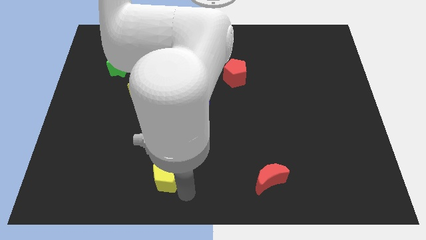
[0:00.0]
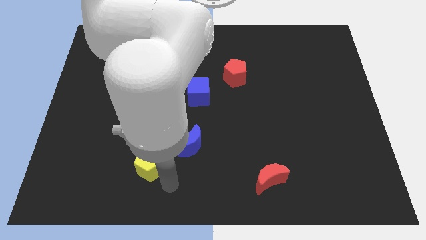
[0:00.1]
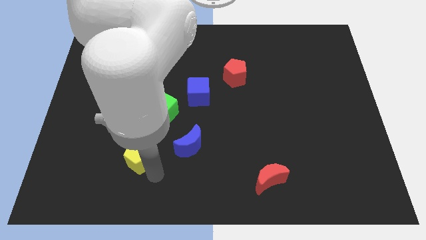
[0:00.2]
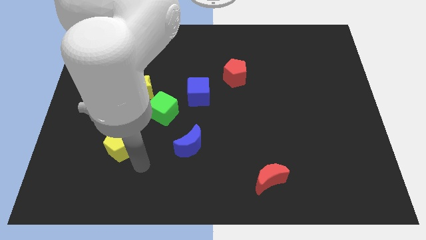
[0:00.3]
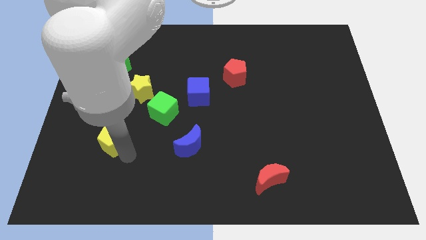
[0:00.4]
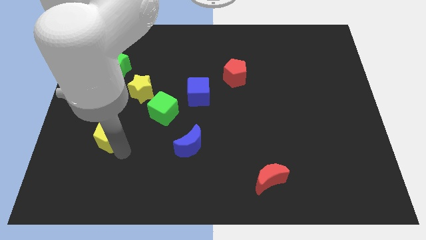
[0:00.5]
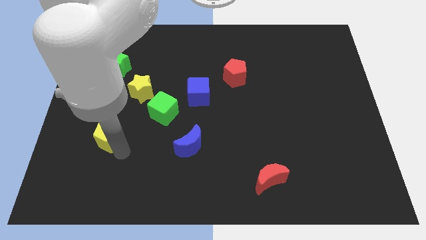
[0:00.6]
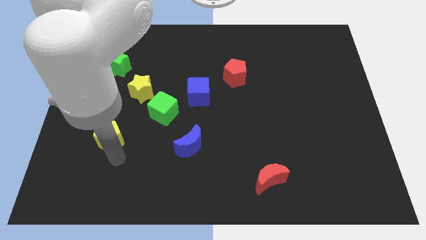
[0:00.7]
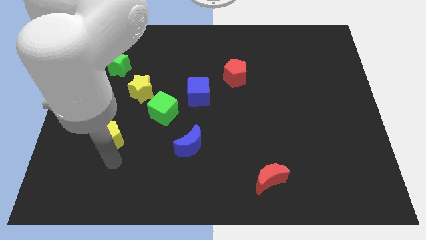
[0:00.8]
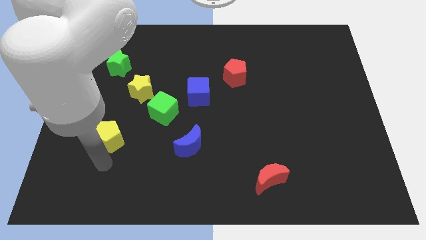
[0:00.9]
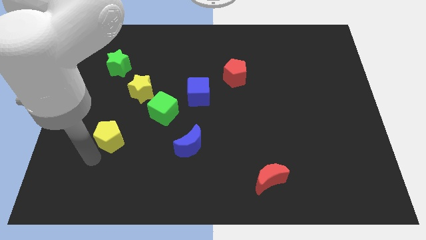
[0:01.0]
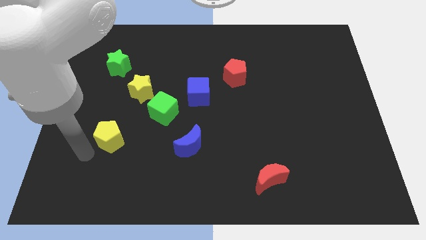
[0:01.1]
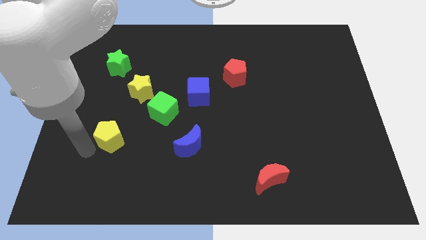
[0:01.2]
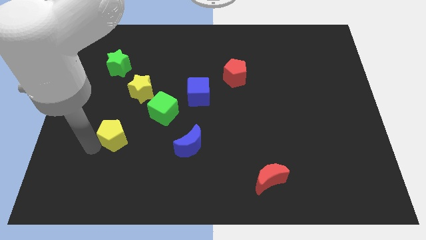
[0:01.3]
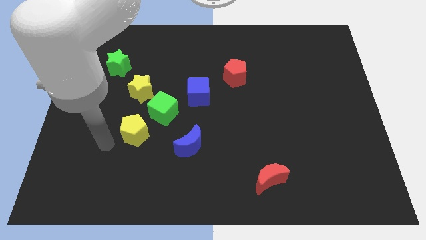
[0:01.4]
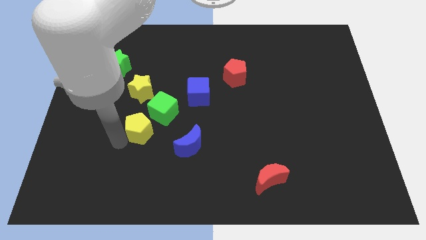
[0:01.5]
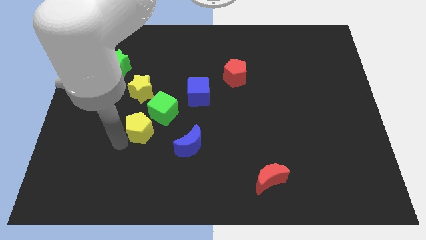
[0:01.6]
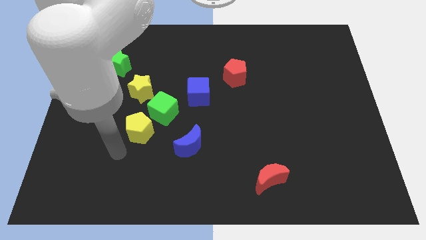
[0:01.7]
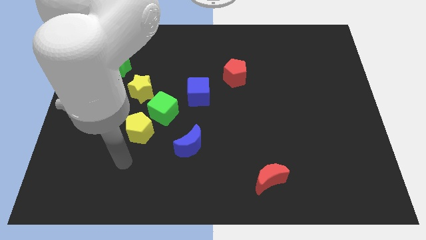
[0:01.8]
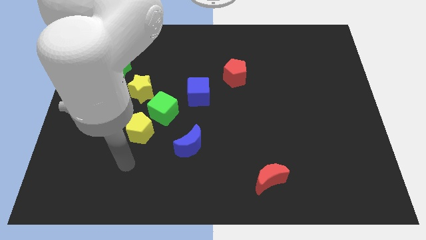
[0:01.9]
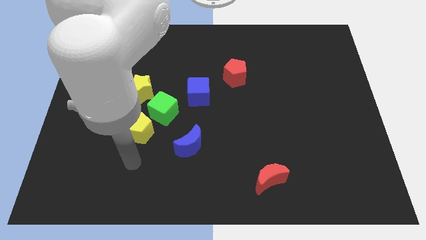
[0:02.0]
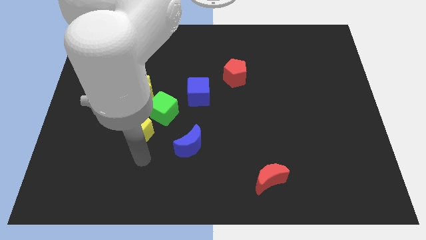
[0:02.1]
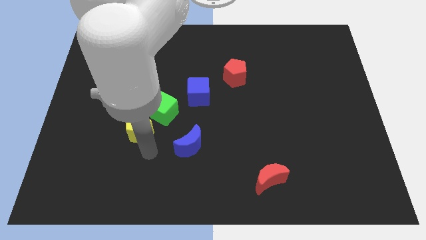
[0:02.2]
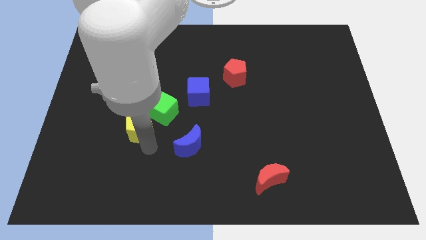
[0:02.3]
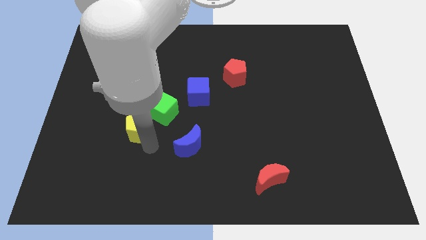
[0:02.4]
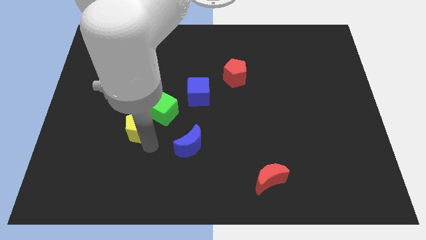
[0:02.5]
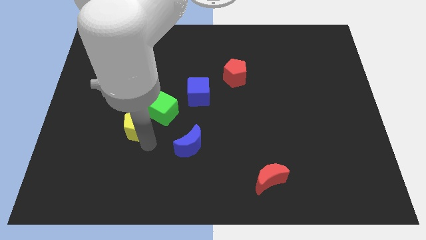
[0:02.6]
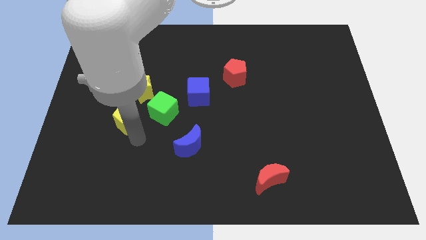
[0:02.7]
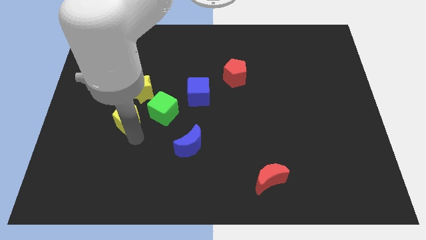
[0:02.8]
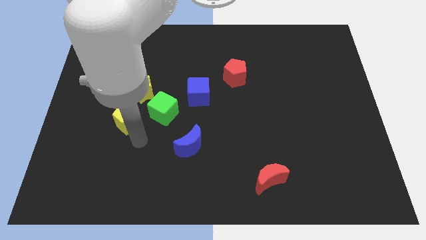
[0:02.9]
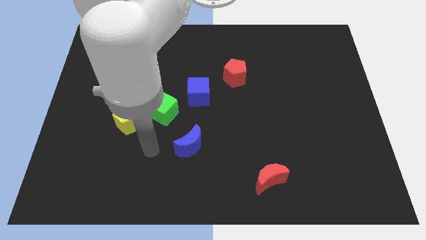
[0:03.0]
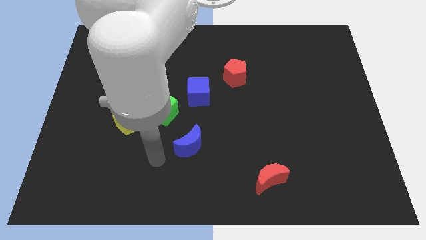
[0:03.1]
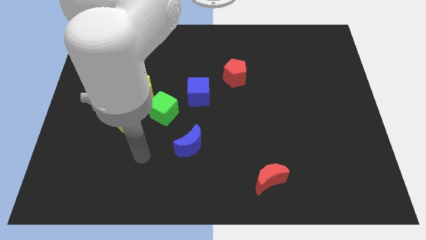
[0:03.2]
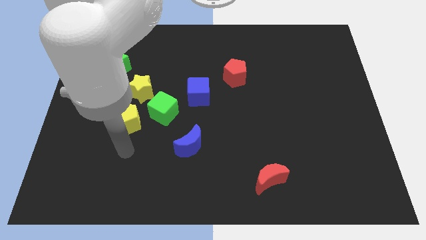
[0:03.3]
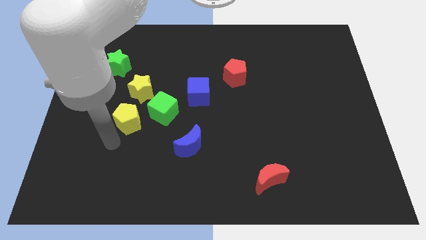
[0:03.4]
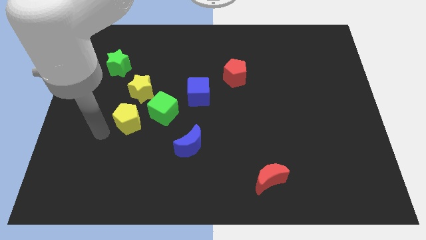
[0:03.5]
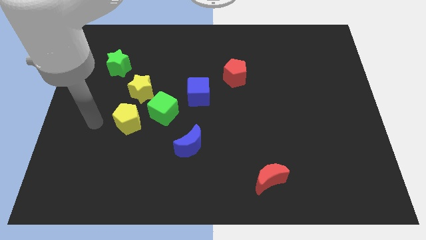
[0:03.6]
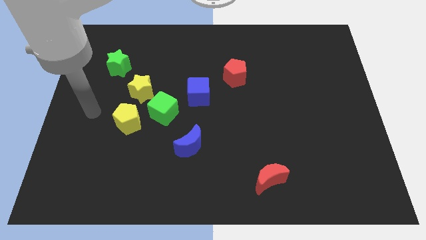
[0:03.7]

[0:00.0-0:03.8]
slide the yellow pentagon to the left of the green cube

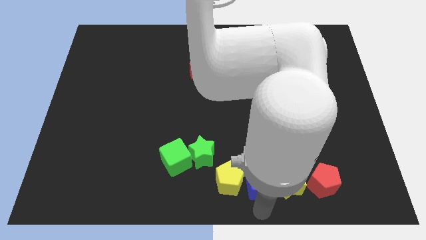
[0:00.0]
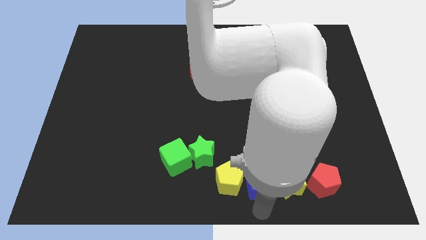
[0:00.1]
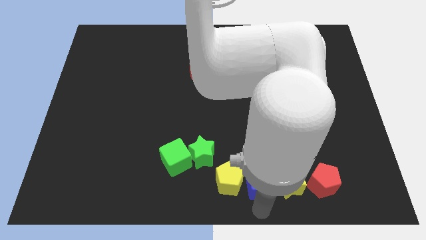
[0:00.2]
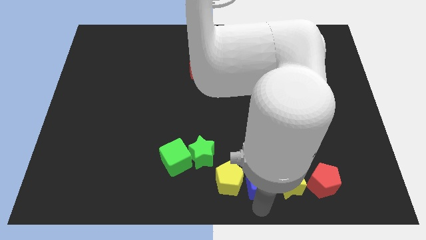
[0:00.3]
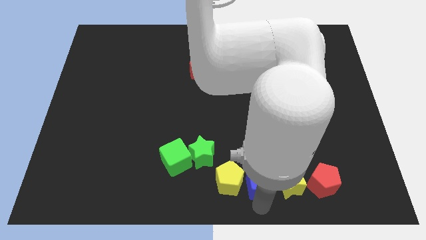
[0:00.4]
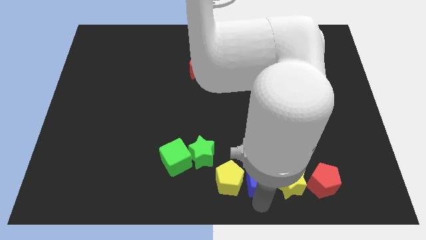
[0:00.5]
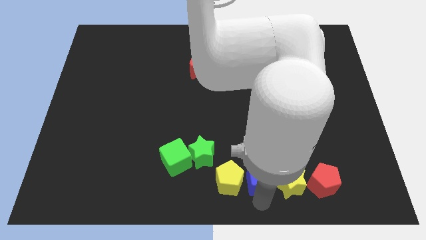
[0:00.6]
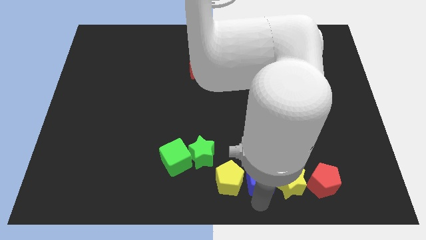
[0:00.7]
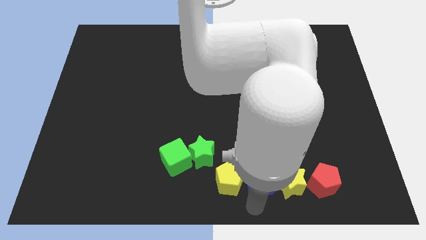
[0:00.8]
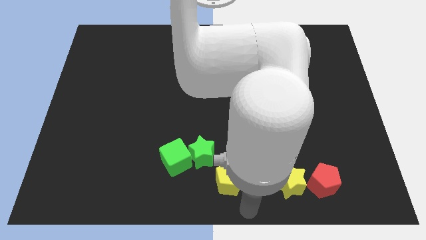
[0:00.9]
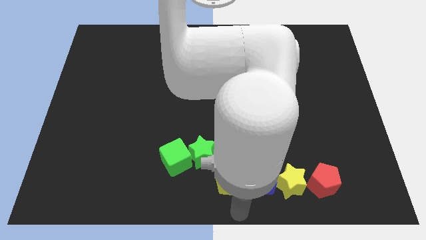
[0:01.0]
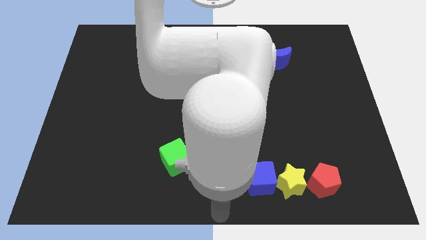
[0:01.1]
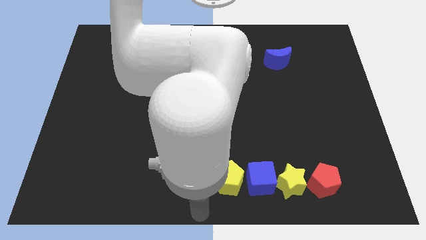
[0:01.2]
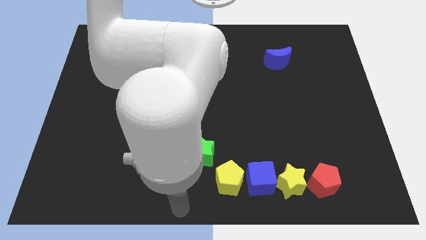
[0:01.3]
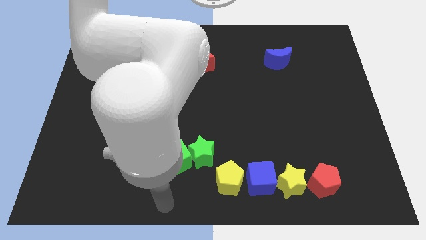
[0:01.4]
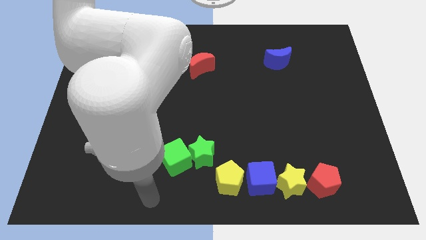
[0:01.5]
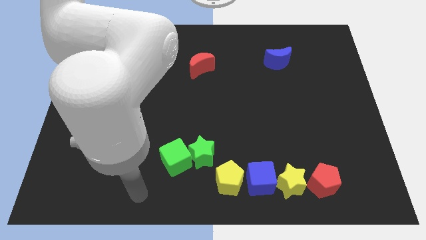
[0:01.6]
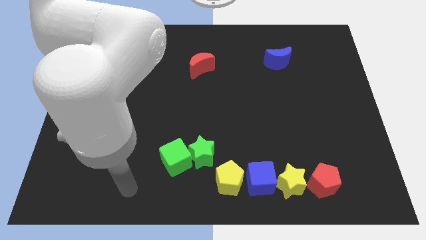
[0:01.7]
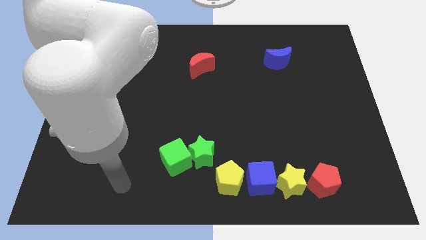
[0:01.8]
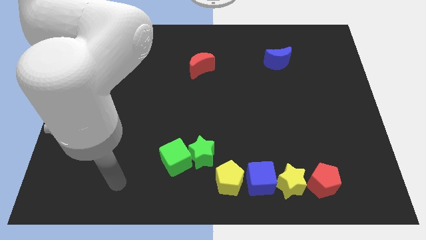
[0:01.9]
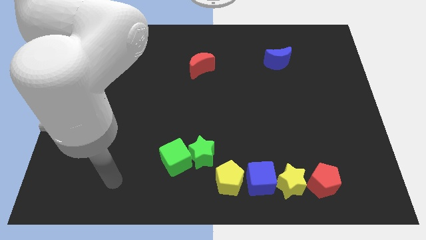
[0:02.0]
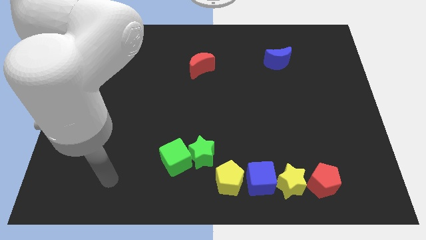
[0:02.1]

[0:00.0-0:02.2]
move your arm away from the blue cube

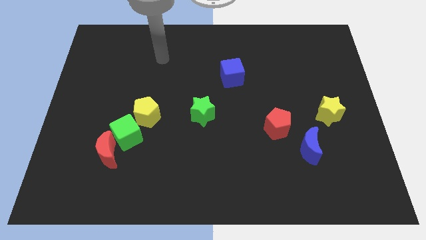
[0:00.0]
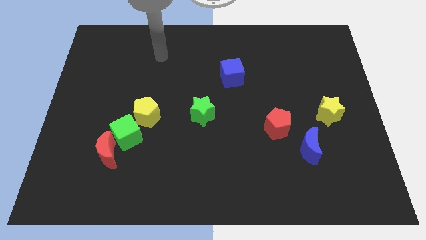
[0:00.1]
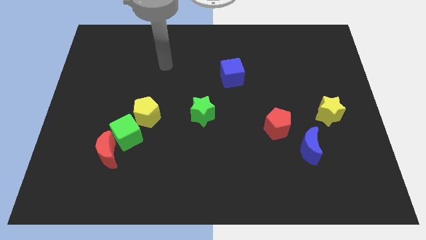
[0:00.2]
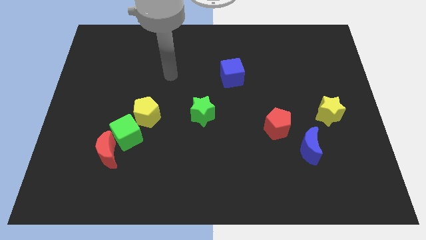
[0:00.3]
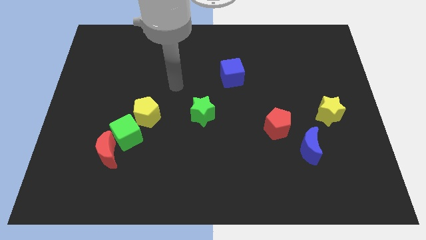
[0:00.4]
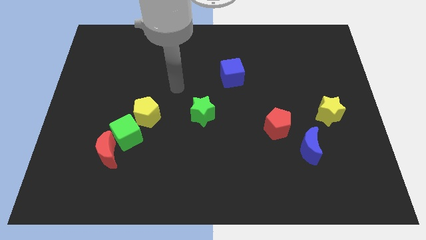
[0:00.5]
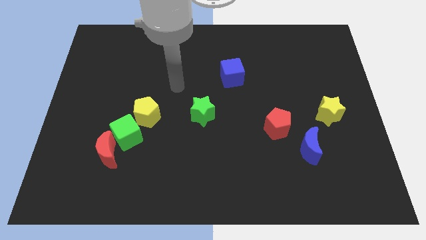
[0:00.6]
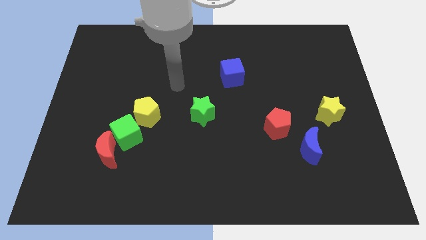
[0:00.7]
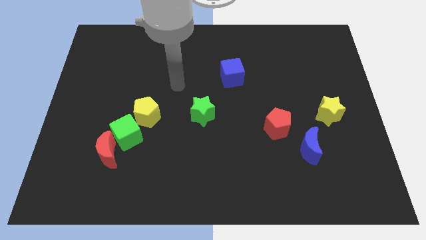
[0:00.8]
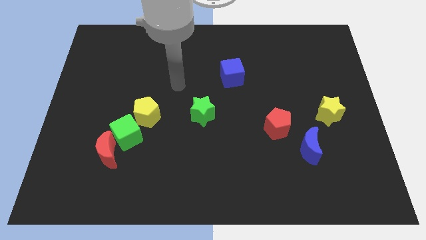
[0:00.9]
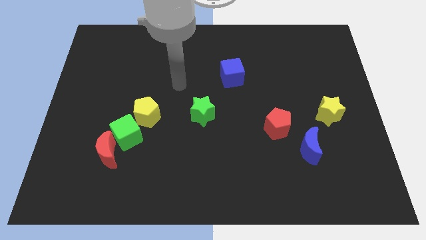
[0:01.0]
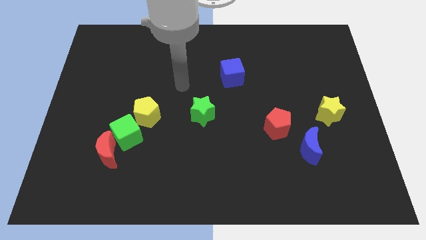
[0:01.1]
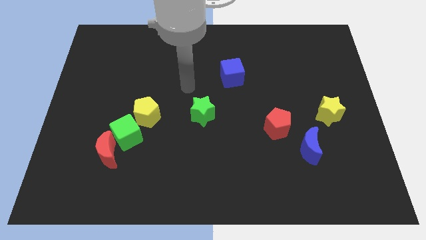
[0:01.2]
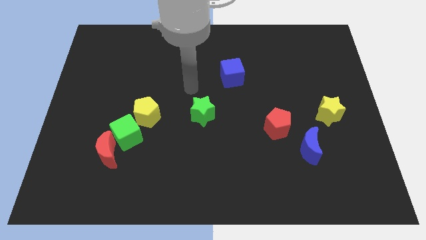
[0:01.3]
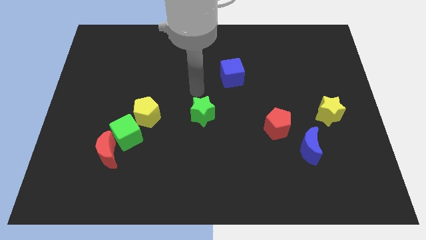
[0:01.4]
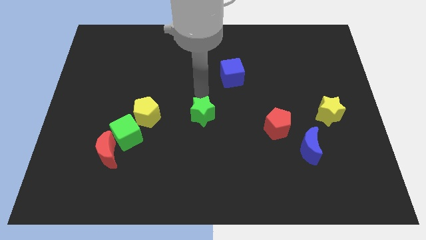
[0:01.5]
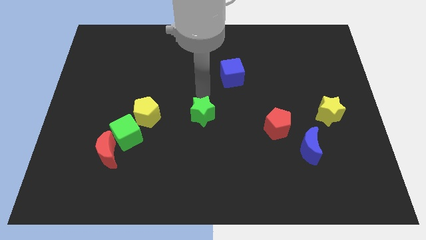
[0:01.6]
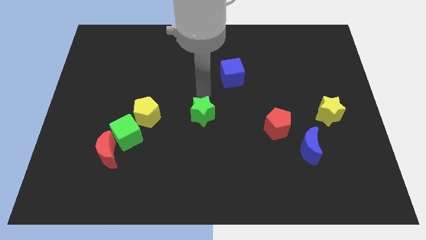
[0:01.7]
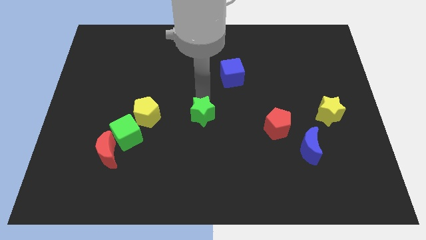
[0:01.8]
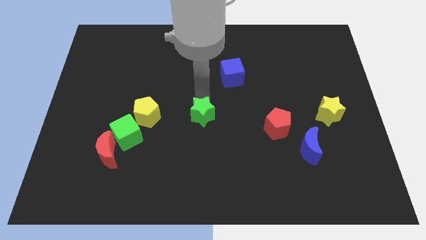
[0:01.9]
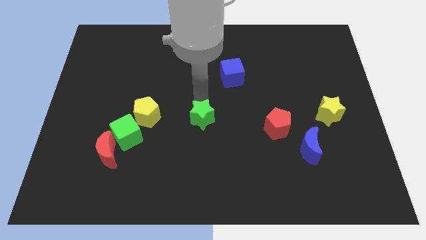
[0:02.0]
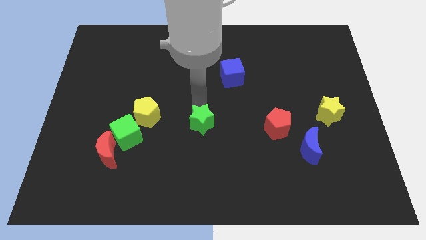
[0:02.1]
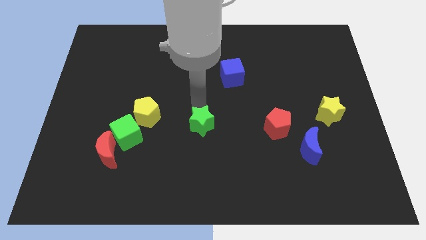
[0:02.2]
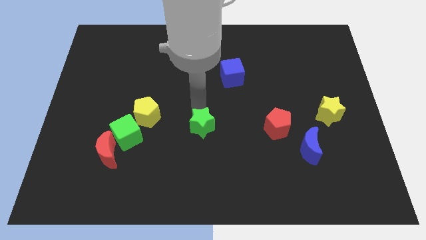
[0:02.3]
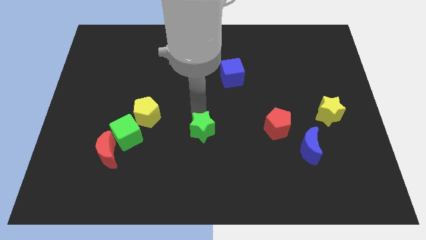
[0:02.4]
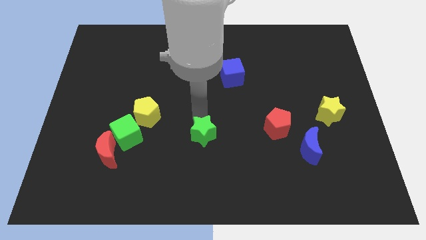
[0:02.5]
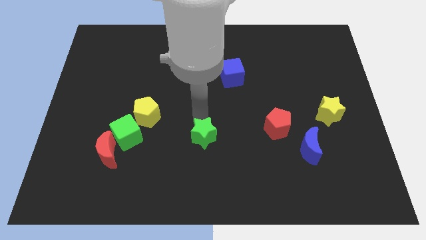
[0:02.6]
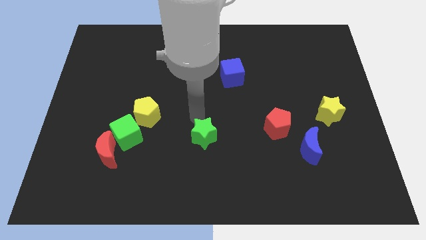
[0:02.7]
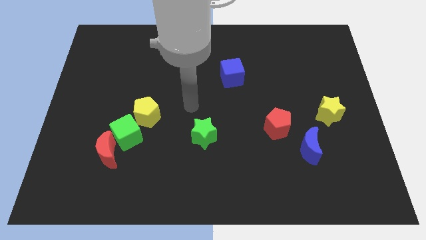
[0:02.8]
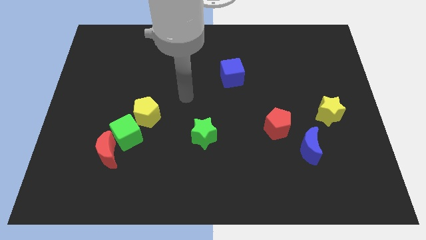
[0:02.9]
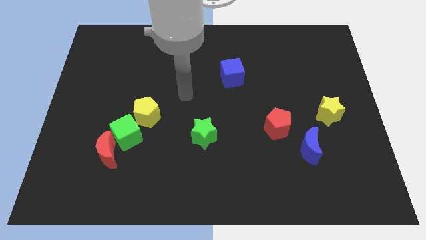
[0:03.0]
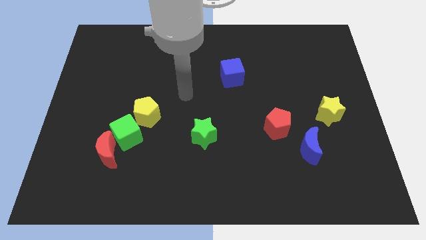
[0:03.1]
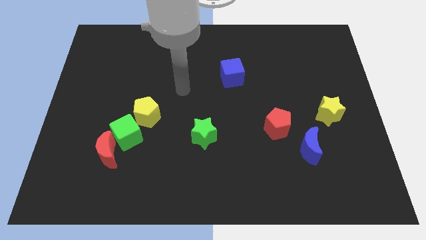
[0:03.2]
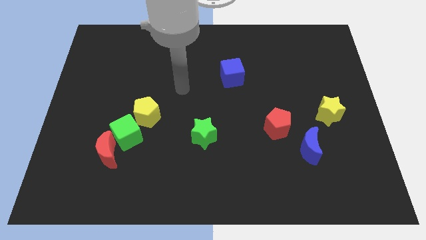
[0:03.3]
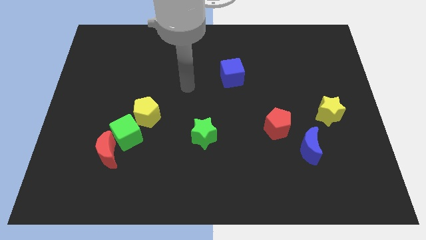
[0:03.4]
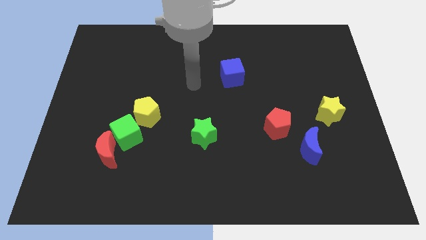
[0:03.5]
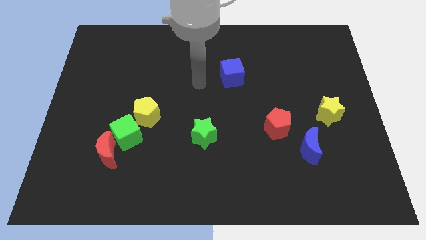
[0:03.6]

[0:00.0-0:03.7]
move the green star to the centre of the board
